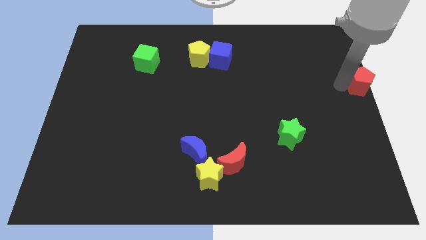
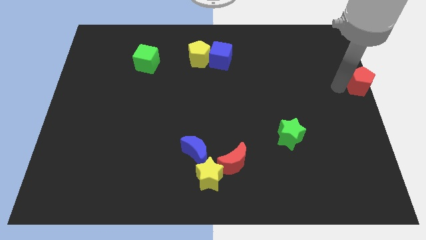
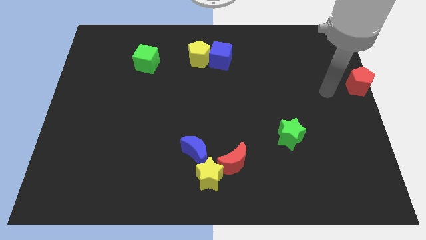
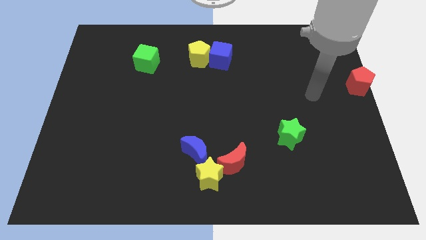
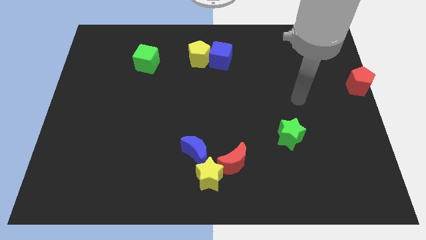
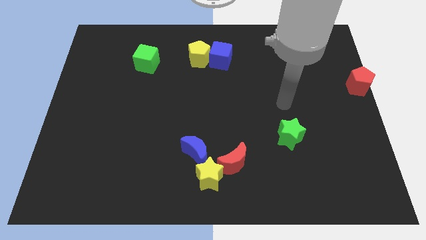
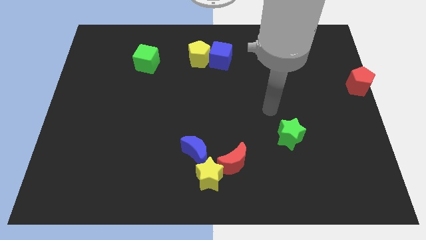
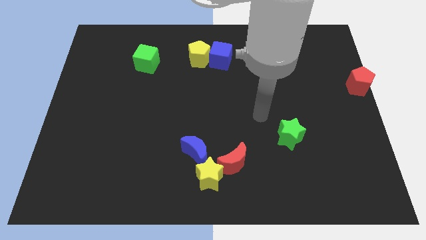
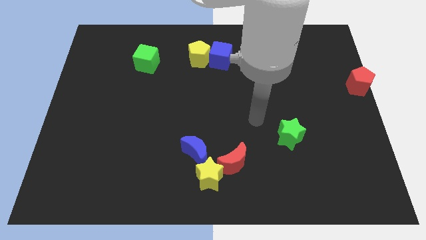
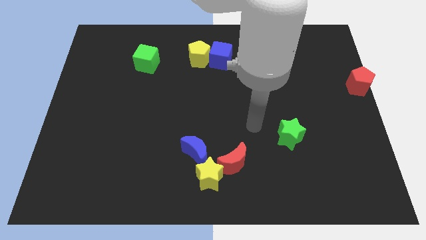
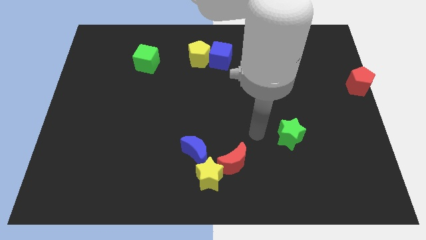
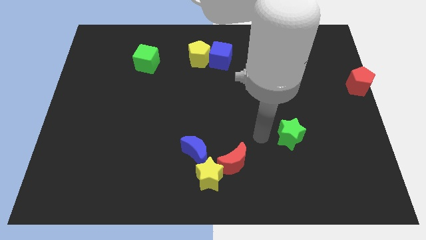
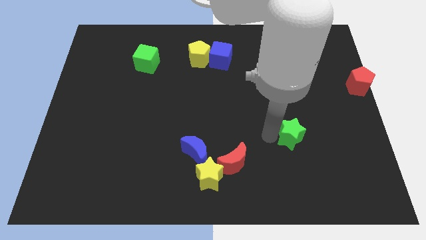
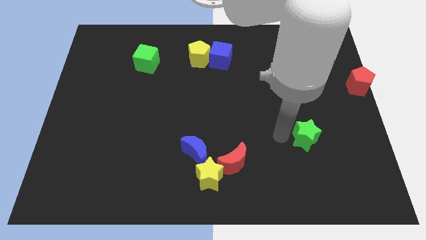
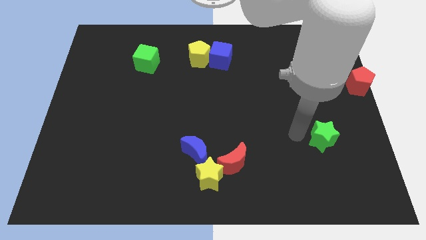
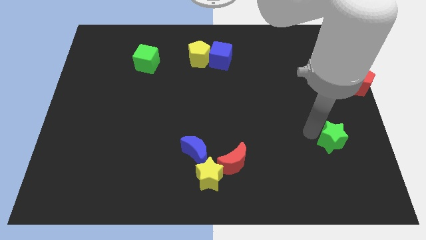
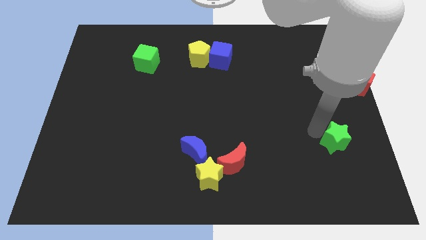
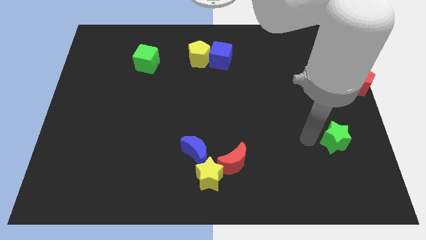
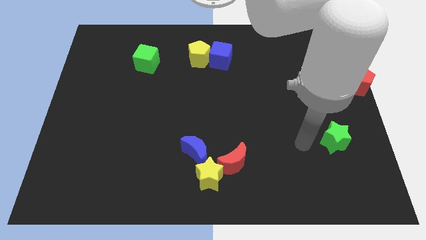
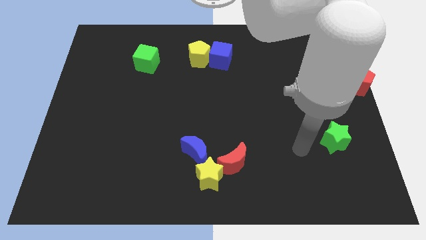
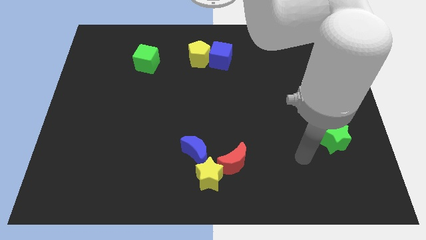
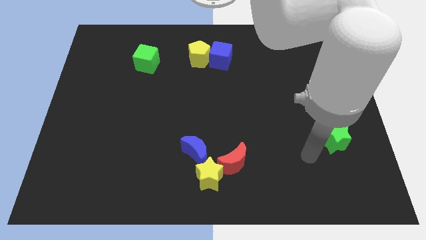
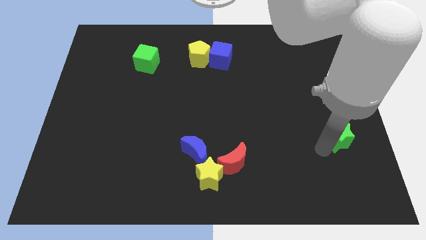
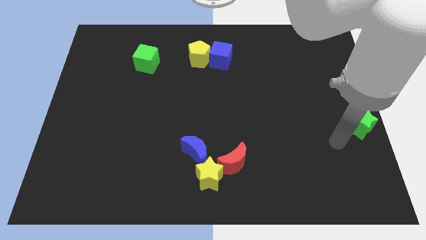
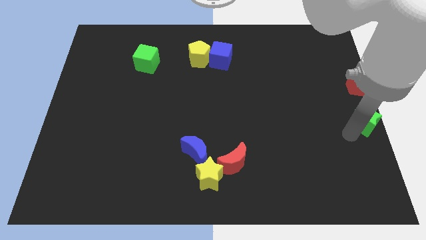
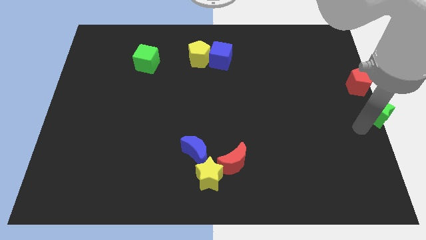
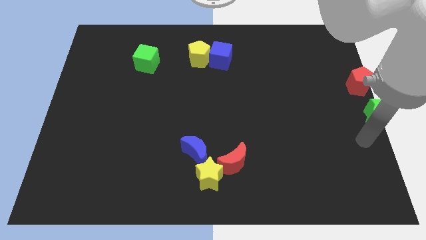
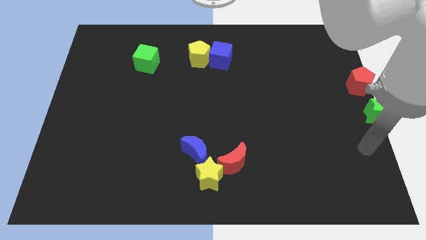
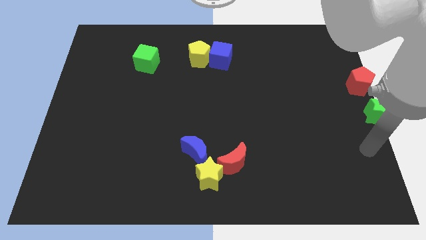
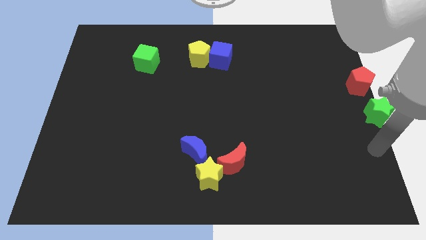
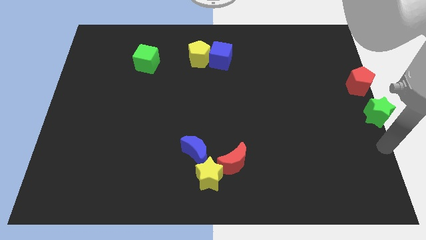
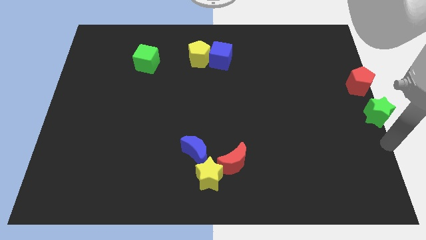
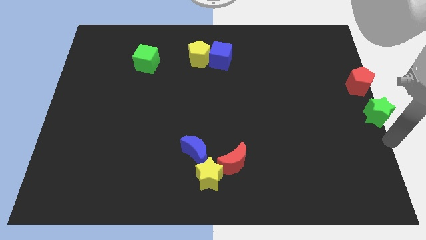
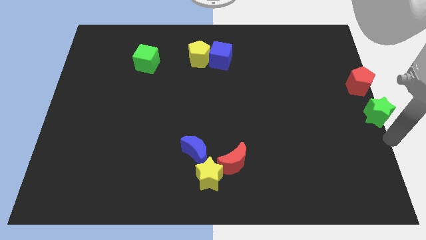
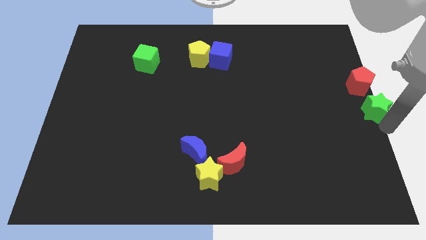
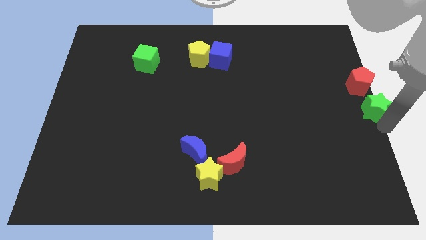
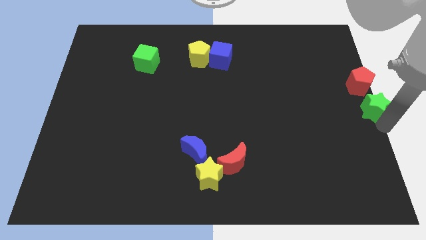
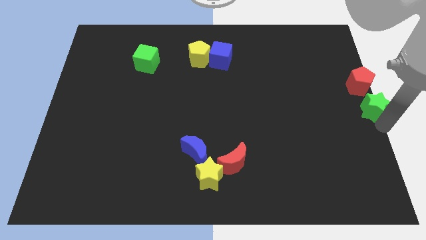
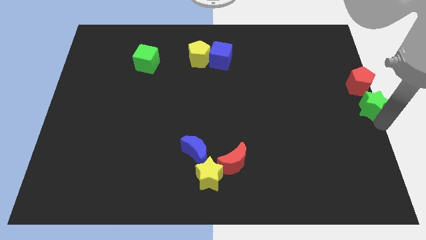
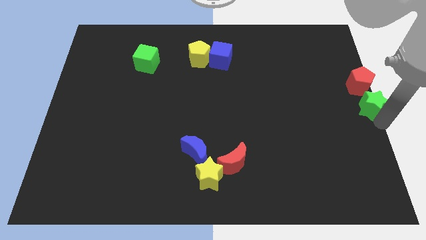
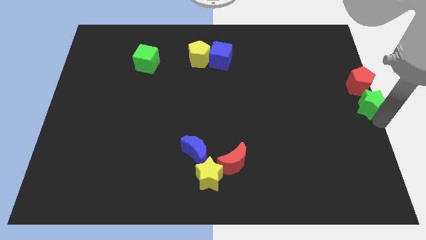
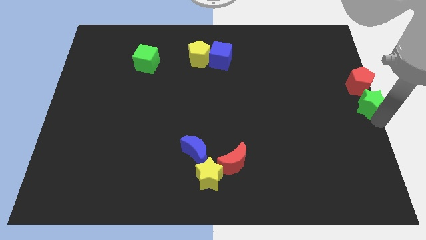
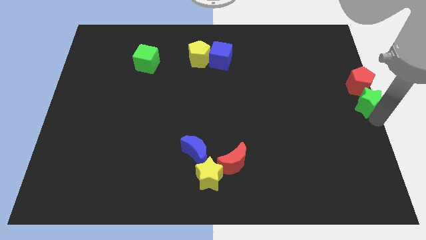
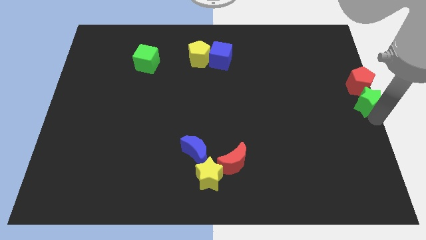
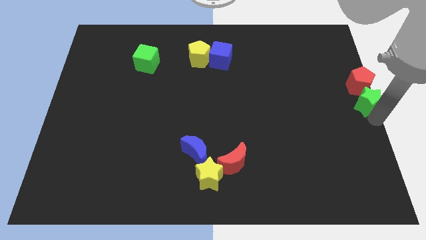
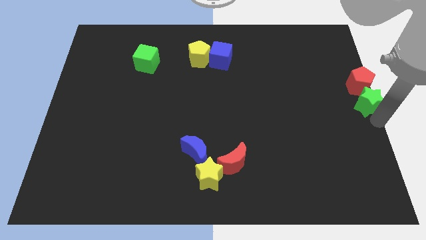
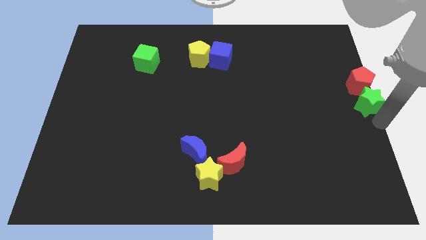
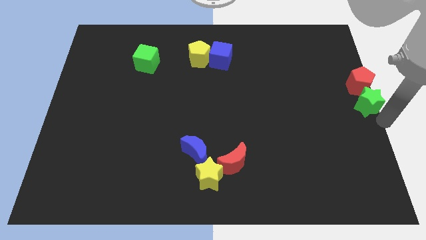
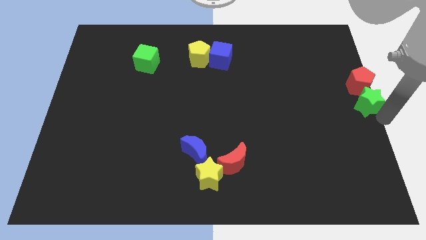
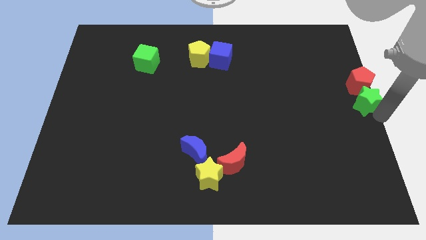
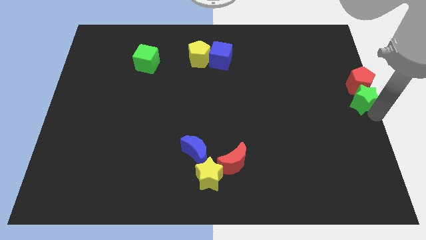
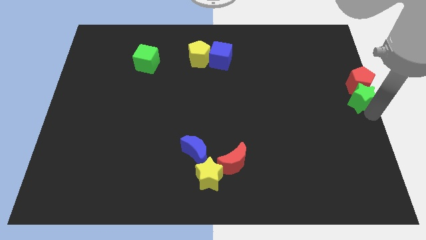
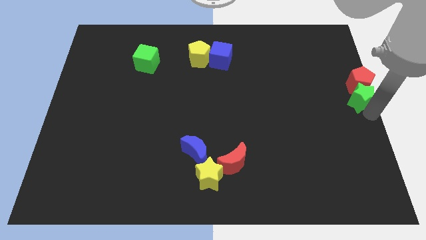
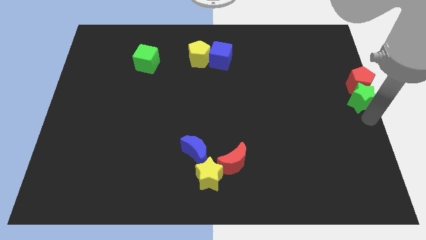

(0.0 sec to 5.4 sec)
push the green star into the bottom side of the red pentagon

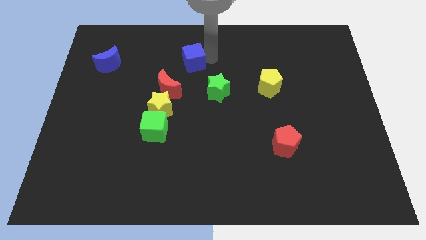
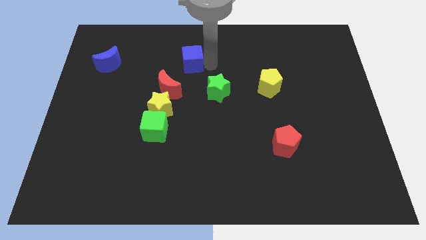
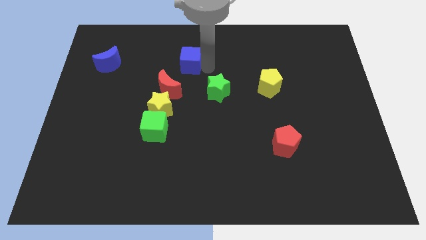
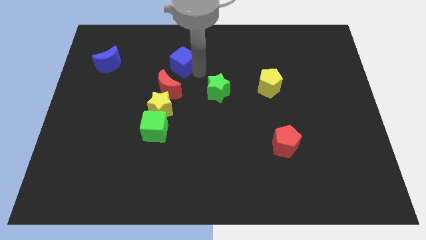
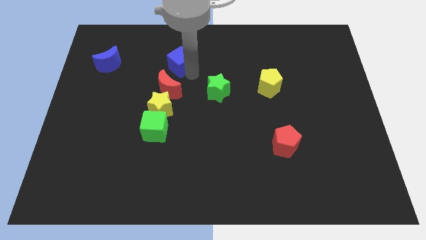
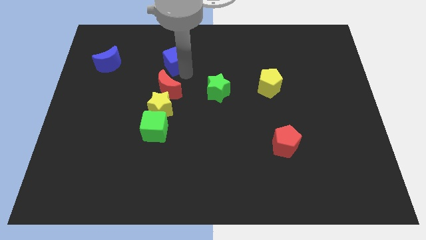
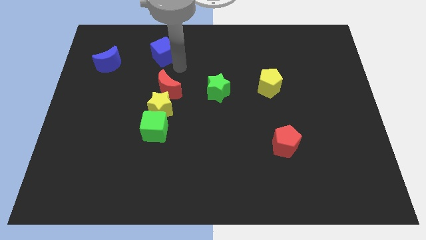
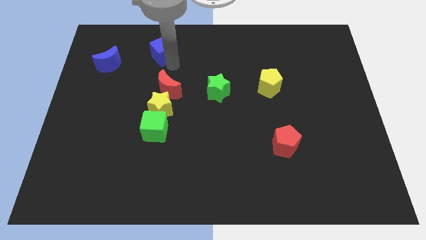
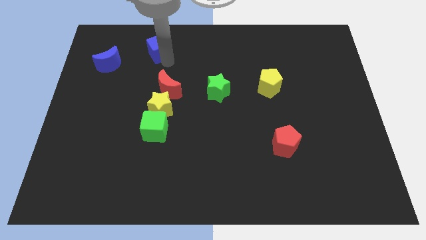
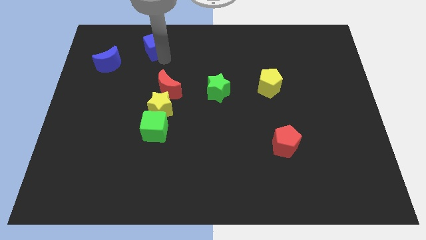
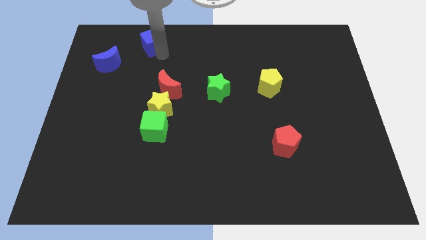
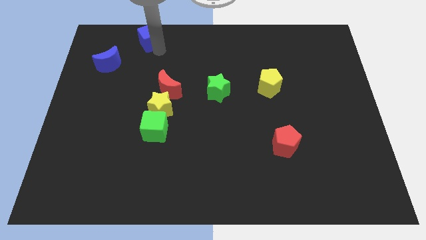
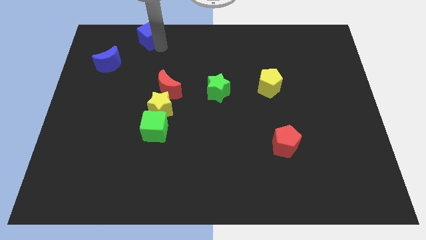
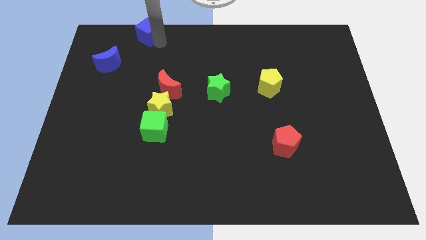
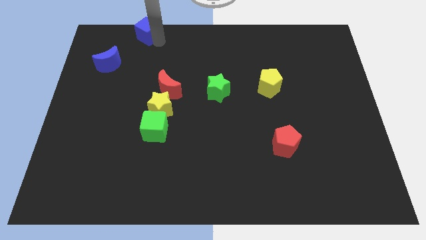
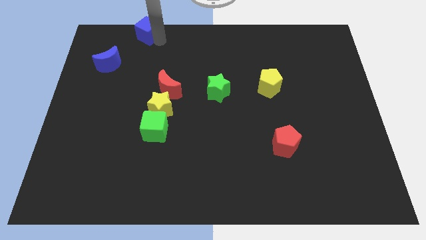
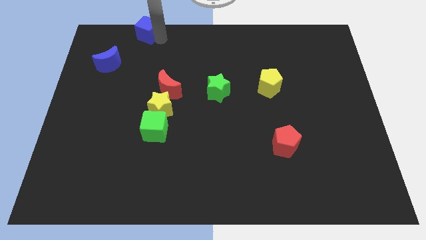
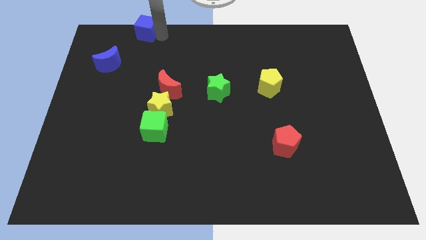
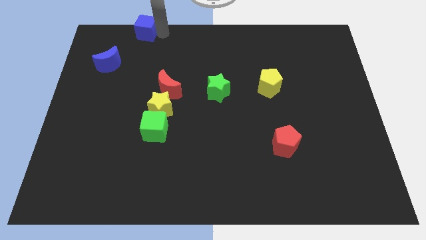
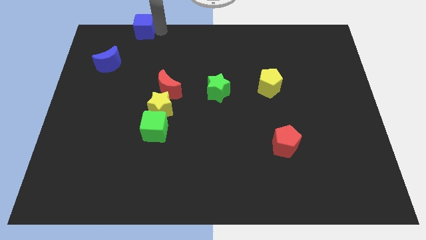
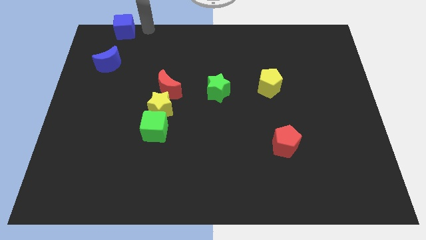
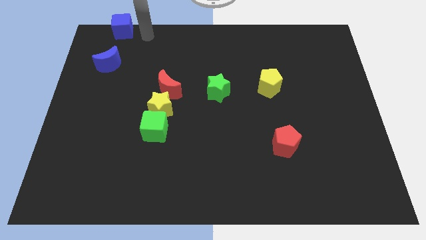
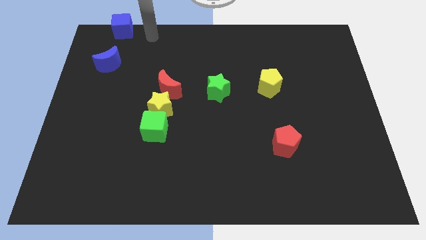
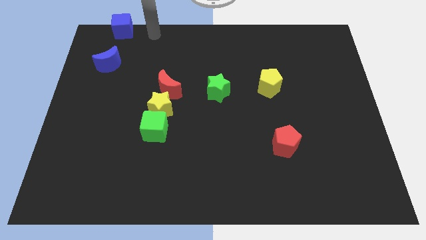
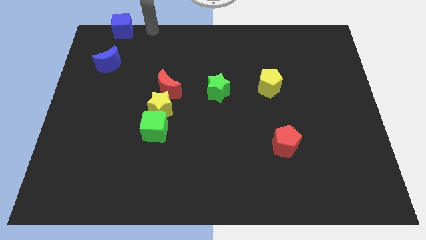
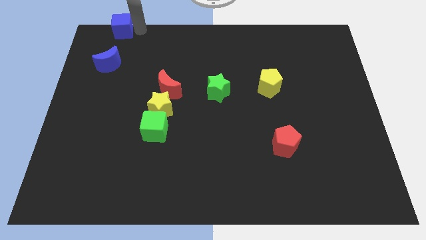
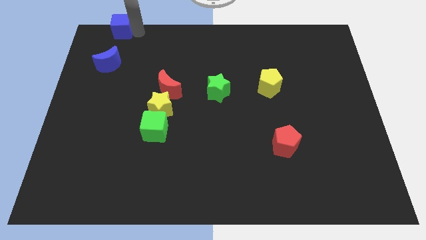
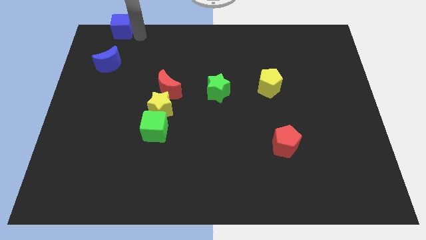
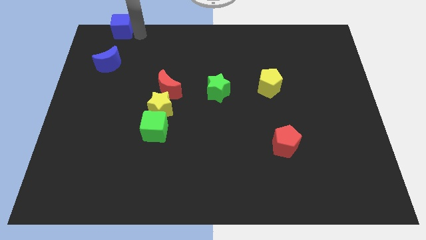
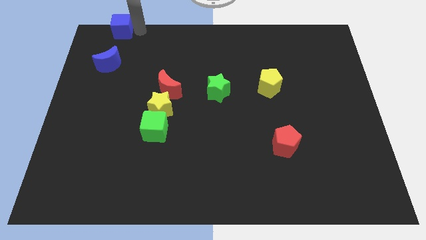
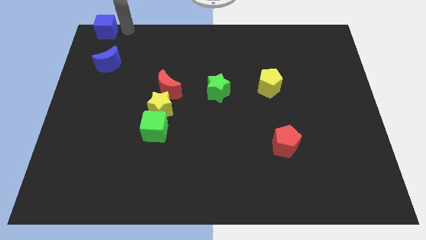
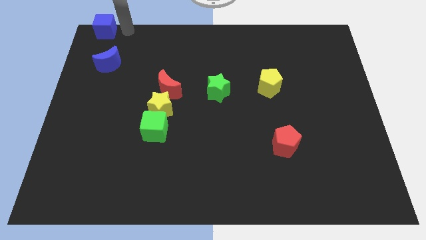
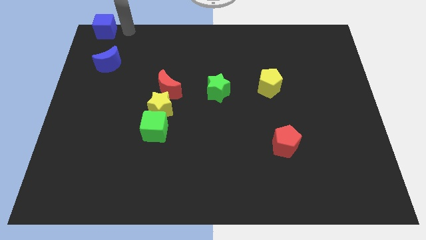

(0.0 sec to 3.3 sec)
push the blue cube to the top of the blue crescent

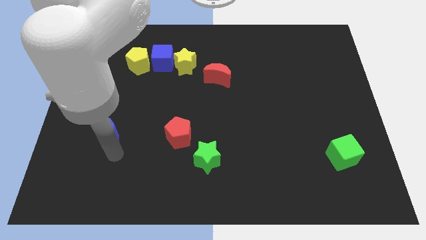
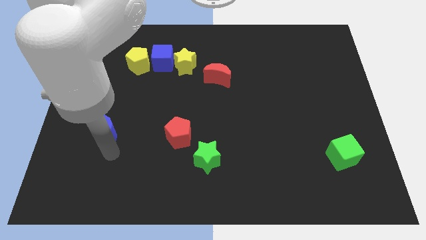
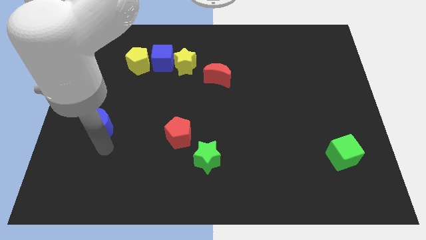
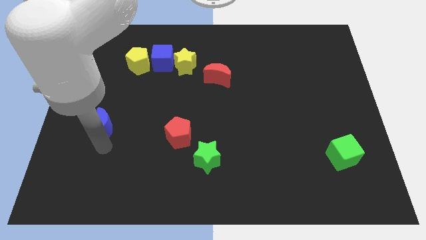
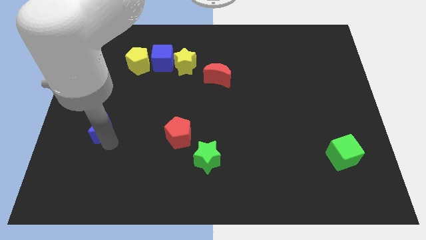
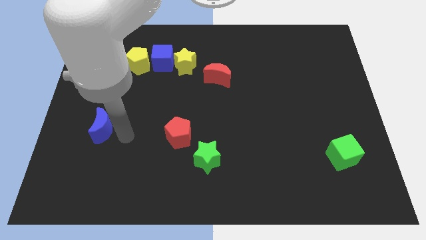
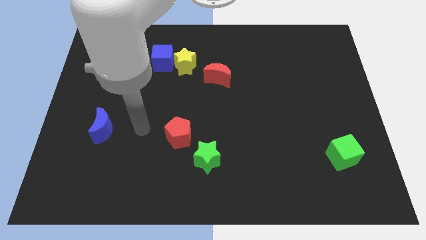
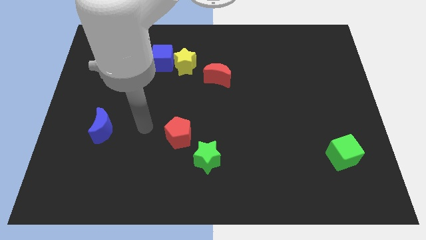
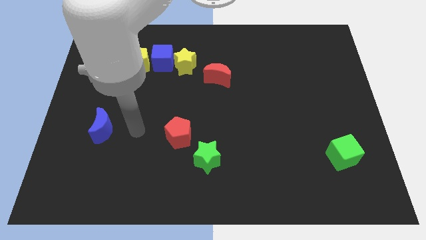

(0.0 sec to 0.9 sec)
move your arm away from blue moon
